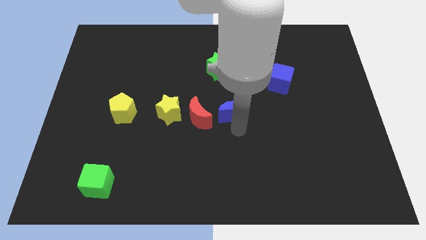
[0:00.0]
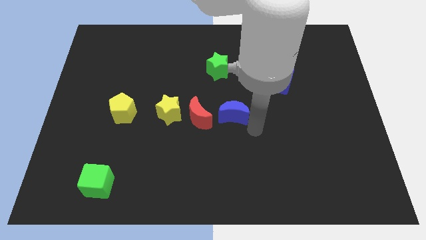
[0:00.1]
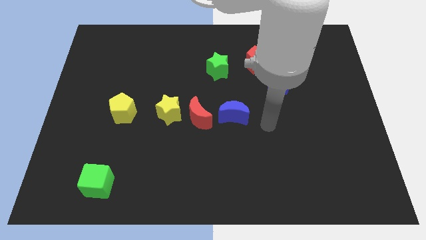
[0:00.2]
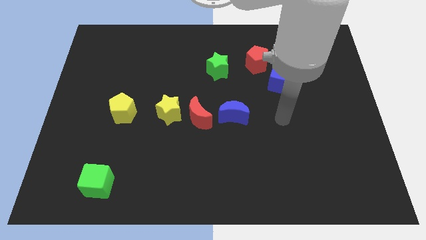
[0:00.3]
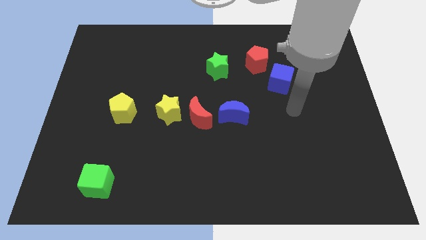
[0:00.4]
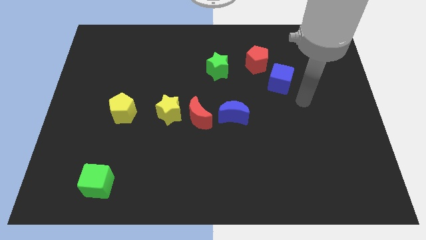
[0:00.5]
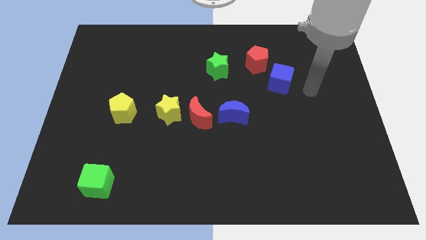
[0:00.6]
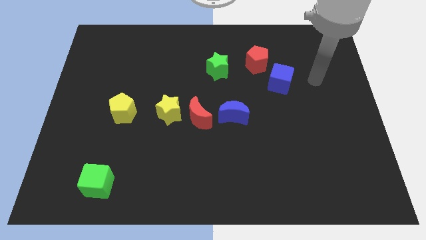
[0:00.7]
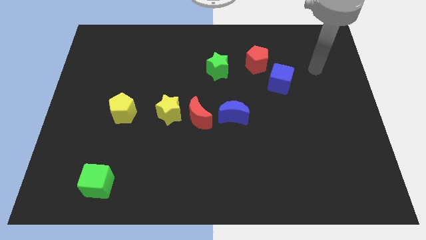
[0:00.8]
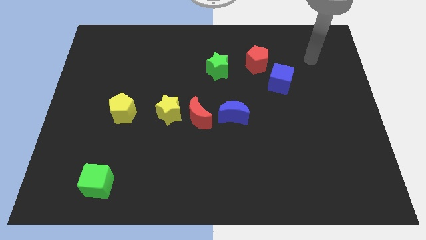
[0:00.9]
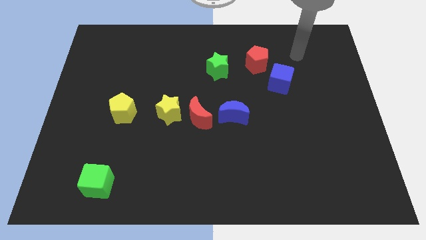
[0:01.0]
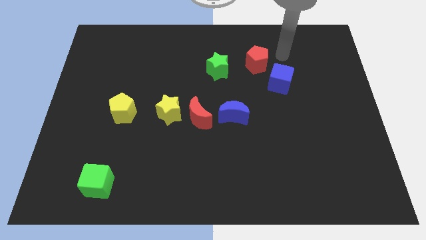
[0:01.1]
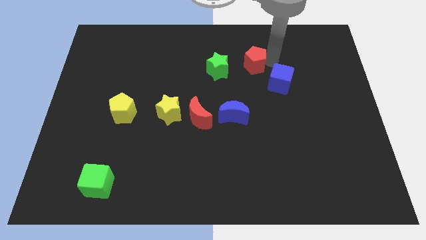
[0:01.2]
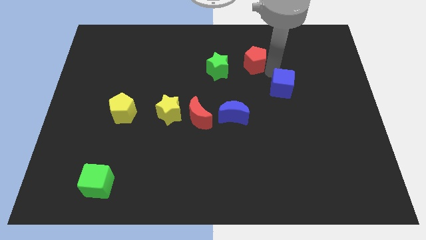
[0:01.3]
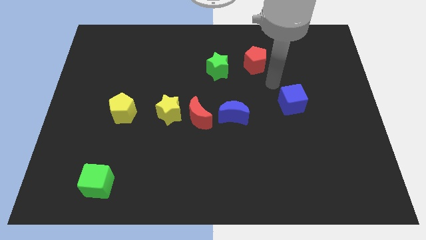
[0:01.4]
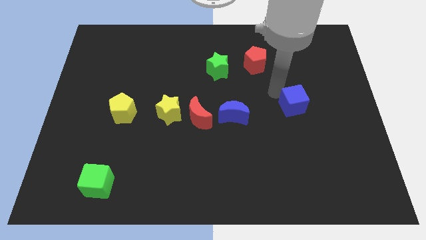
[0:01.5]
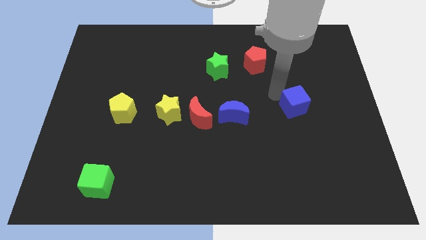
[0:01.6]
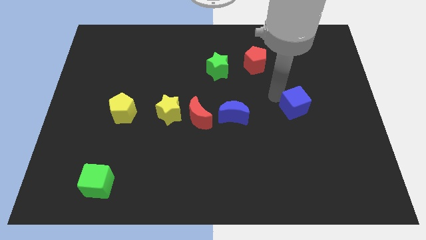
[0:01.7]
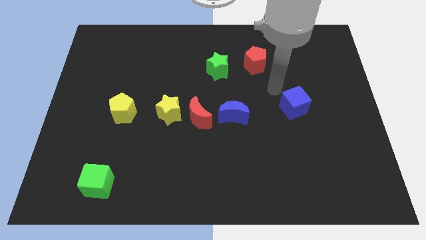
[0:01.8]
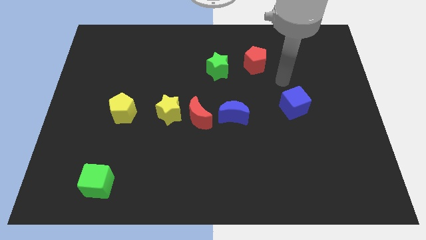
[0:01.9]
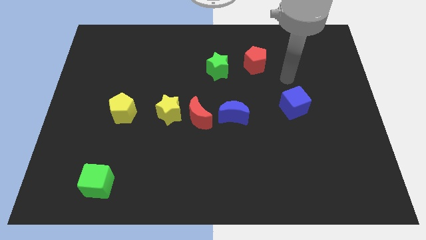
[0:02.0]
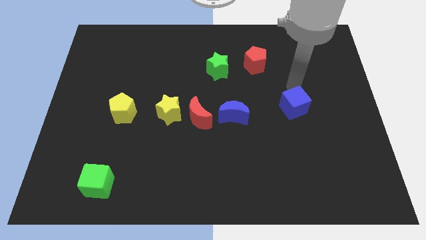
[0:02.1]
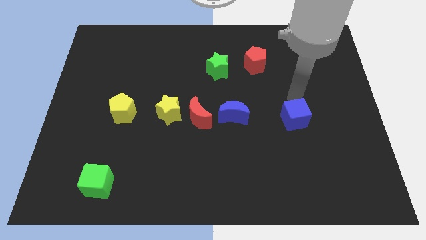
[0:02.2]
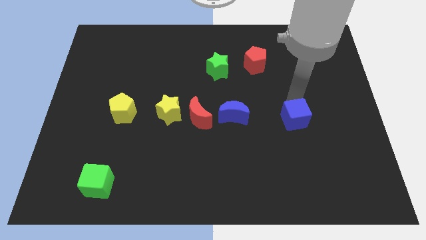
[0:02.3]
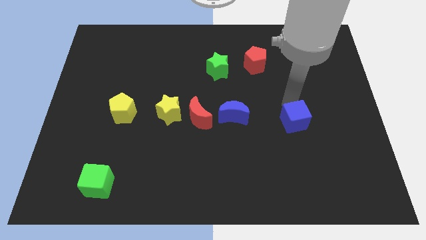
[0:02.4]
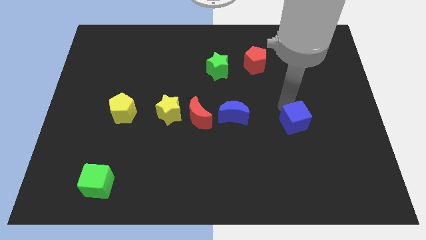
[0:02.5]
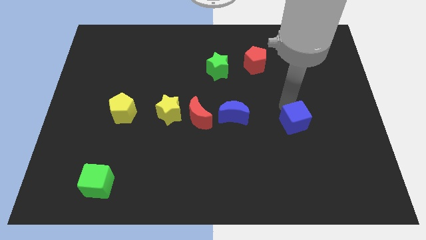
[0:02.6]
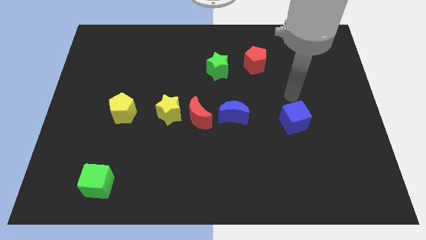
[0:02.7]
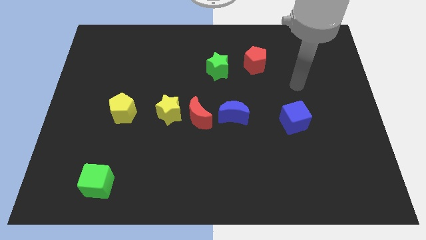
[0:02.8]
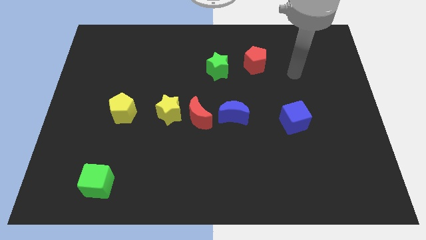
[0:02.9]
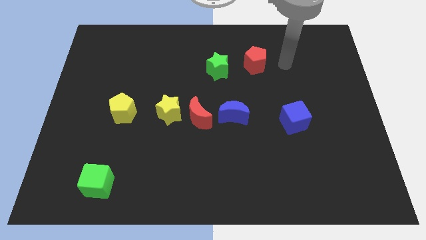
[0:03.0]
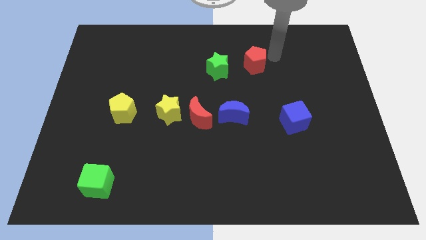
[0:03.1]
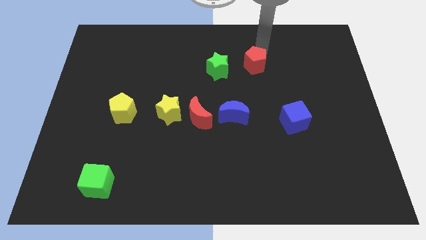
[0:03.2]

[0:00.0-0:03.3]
separate the blue cube from the red pentagon

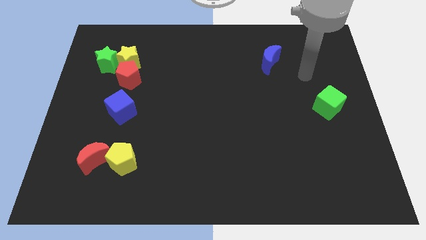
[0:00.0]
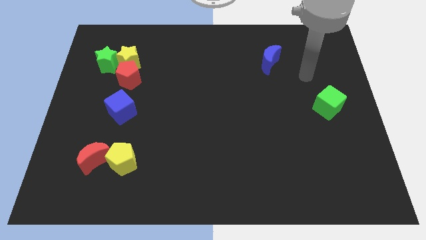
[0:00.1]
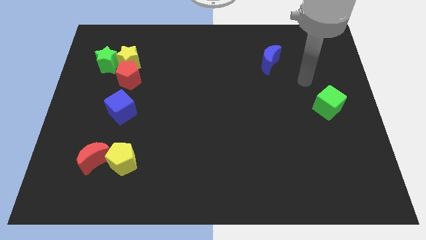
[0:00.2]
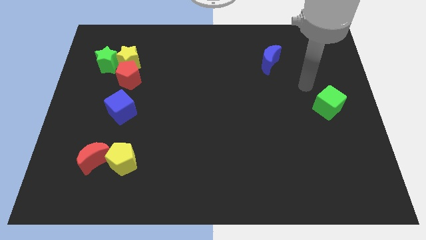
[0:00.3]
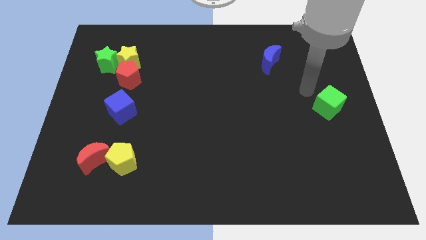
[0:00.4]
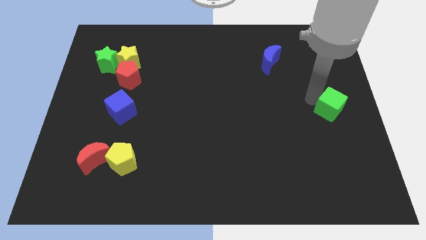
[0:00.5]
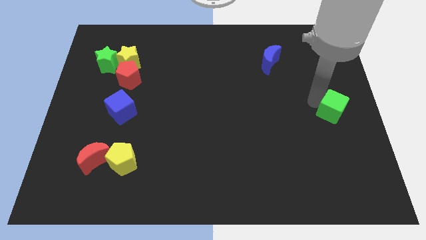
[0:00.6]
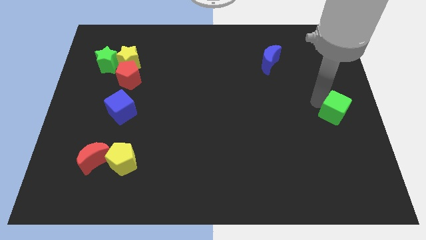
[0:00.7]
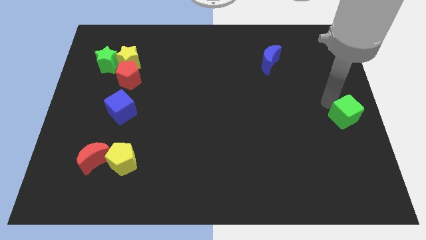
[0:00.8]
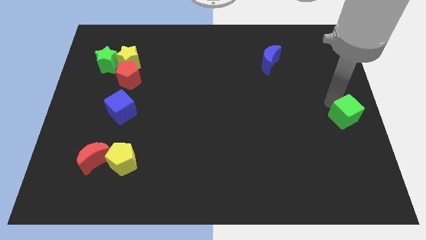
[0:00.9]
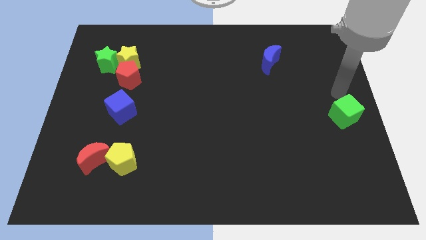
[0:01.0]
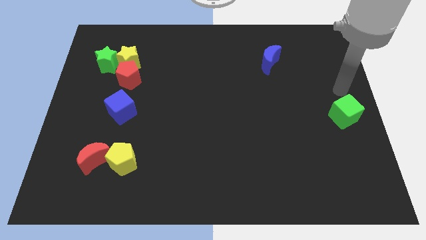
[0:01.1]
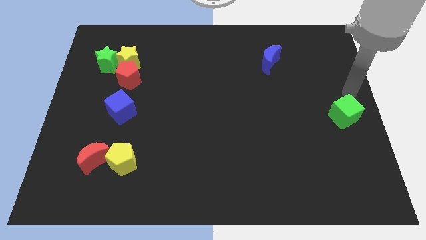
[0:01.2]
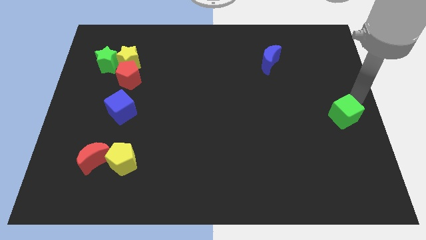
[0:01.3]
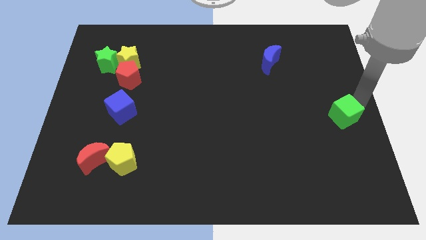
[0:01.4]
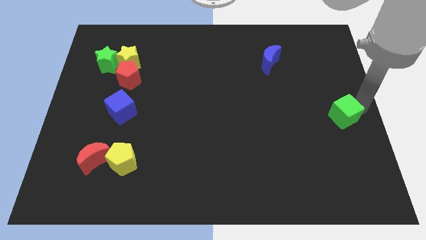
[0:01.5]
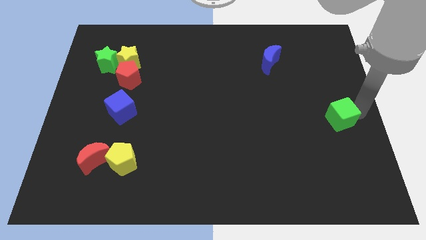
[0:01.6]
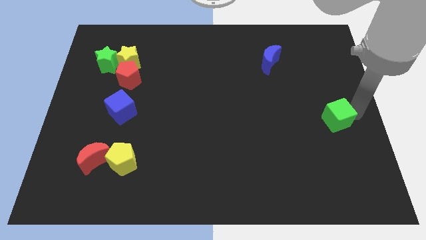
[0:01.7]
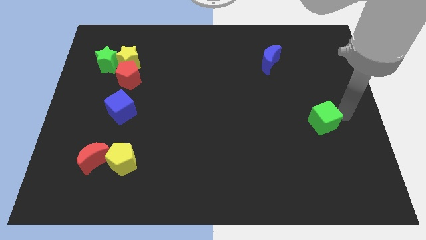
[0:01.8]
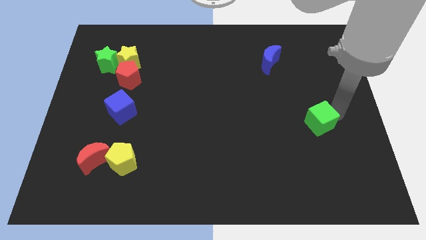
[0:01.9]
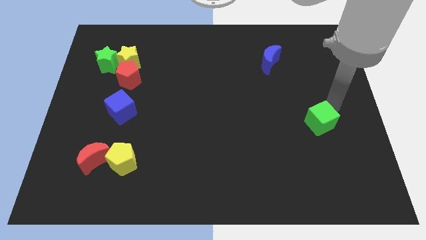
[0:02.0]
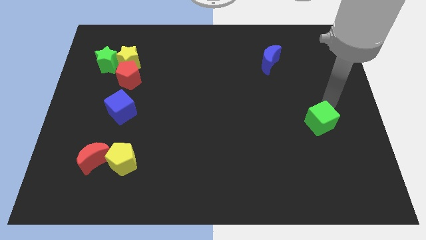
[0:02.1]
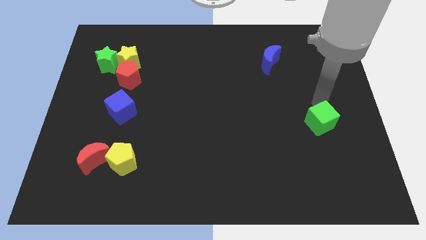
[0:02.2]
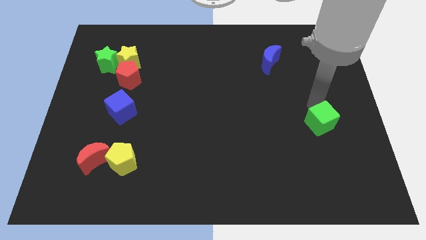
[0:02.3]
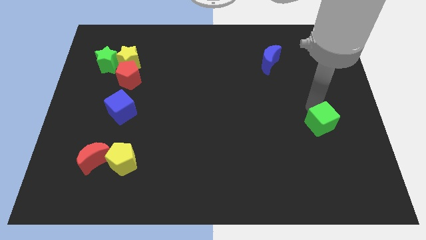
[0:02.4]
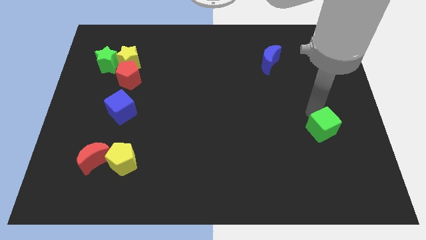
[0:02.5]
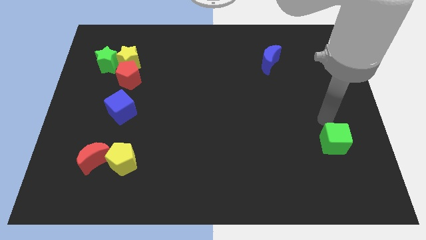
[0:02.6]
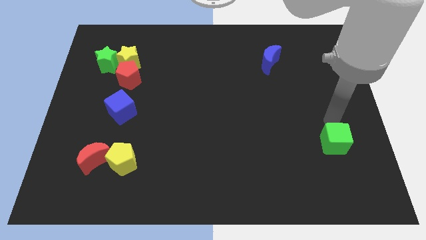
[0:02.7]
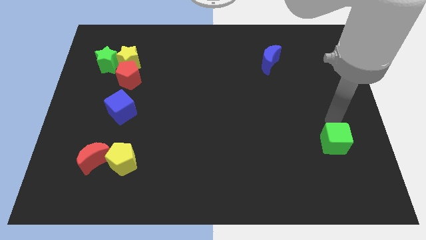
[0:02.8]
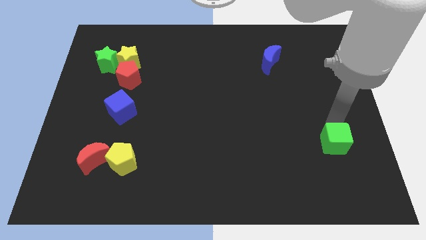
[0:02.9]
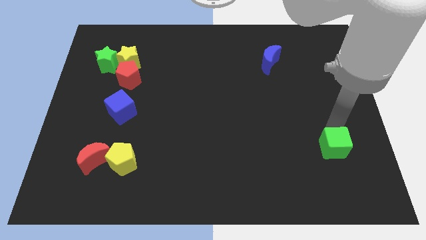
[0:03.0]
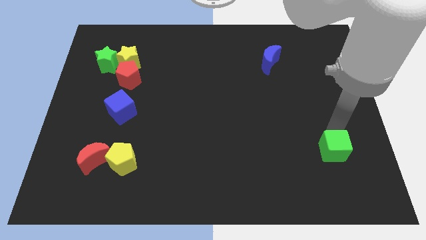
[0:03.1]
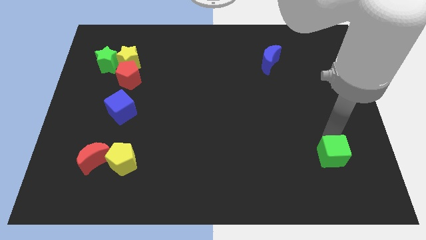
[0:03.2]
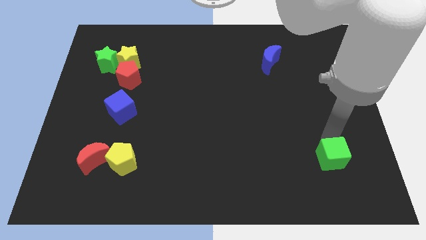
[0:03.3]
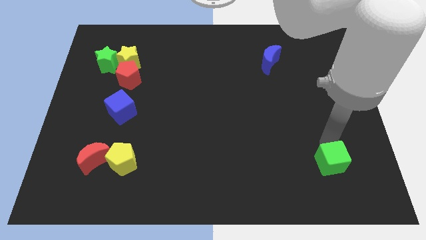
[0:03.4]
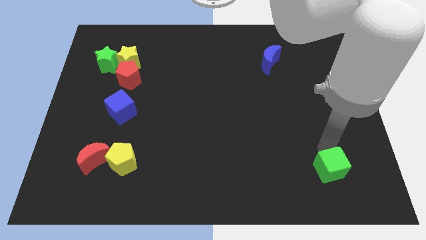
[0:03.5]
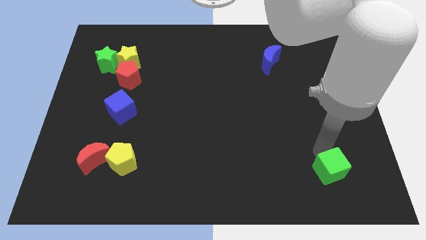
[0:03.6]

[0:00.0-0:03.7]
move the green cube towards the bottom side of the board

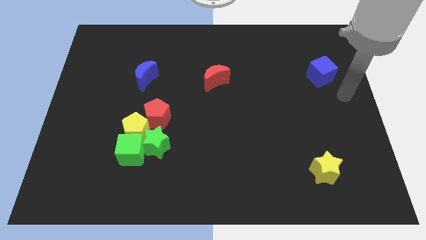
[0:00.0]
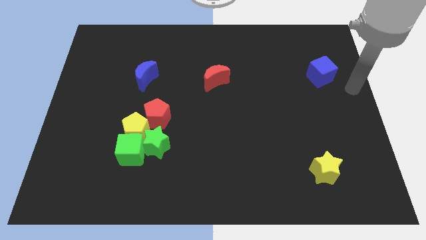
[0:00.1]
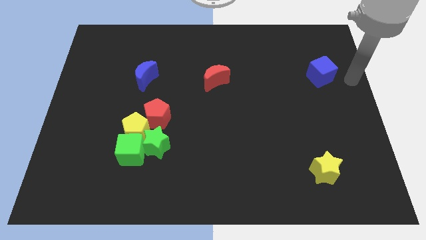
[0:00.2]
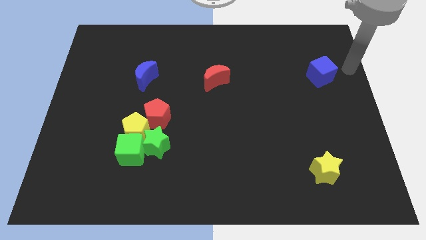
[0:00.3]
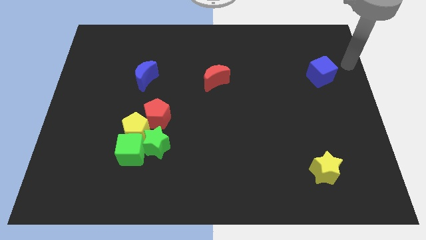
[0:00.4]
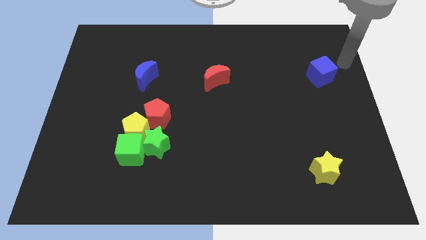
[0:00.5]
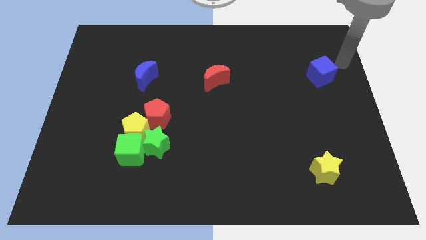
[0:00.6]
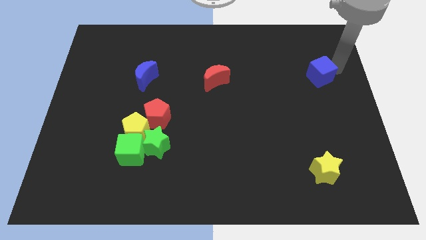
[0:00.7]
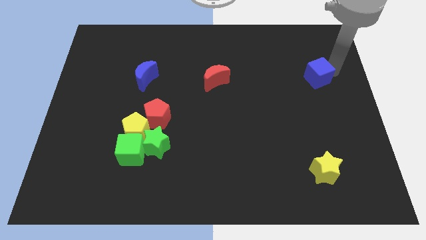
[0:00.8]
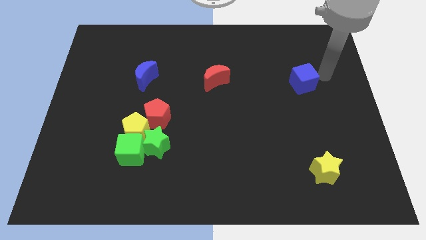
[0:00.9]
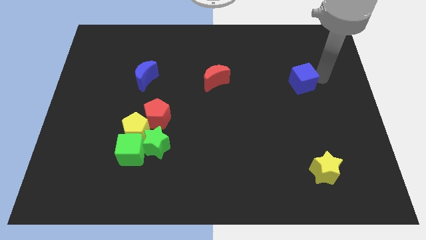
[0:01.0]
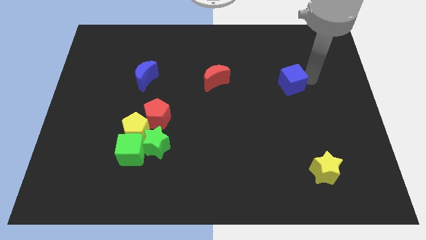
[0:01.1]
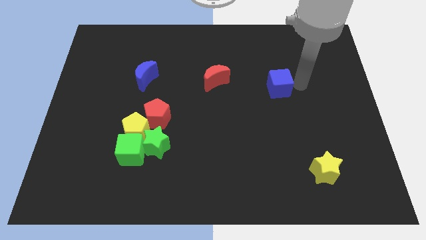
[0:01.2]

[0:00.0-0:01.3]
push the blue cube towards the red crescent

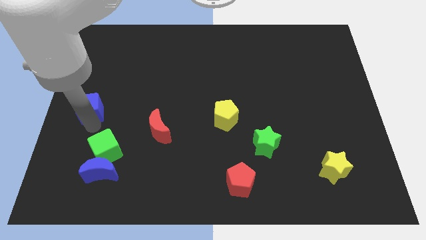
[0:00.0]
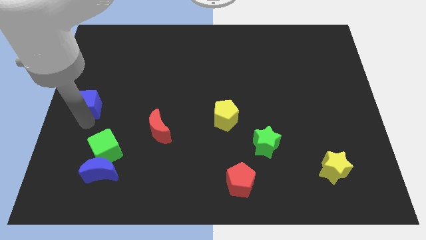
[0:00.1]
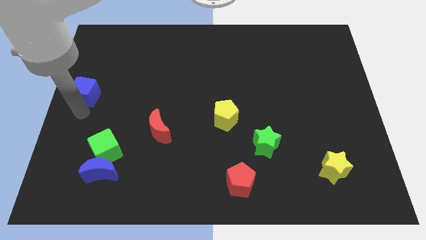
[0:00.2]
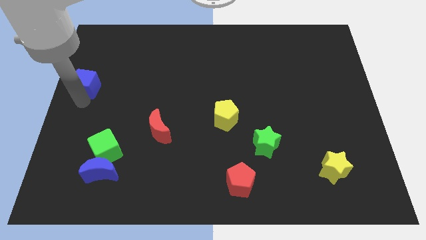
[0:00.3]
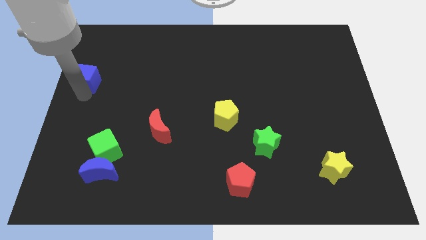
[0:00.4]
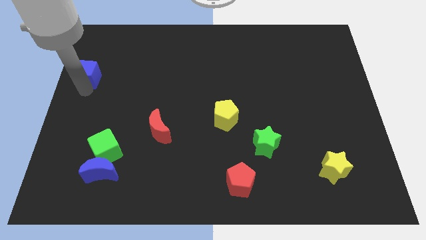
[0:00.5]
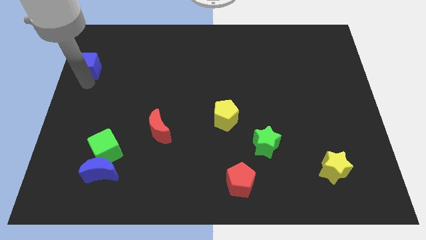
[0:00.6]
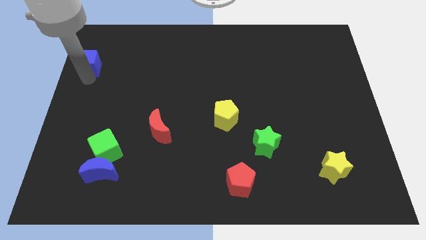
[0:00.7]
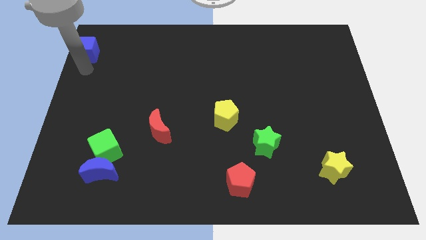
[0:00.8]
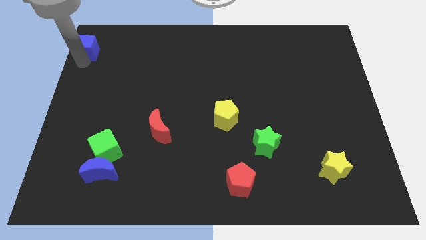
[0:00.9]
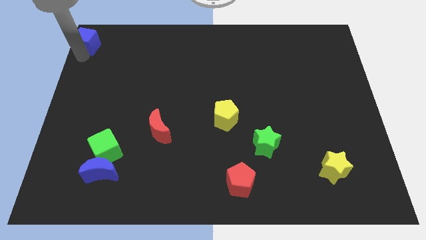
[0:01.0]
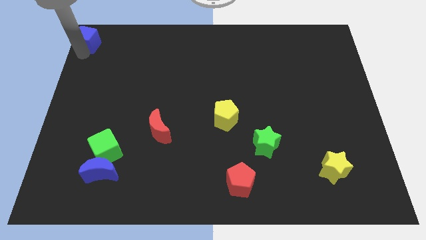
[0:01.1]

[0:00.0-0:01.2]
slide the blue cube towards up
